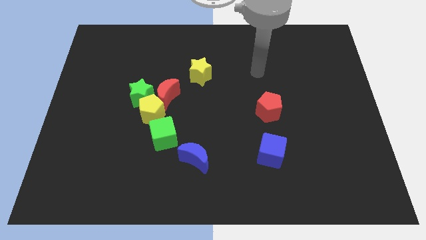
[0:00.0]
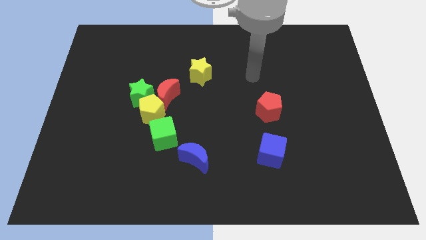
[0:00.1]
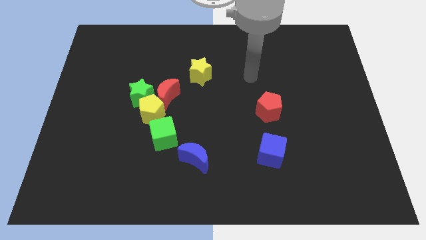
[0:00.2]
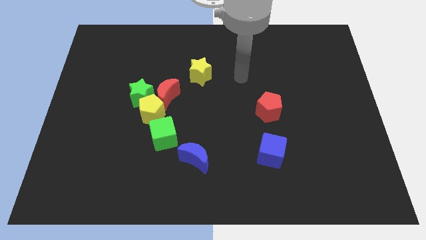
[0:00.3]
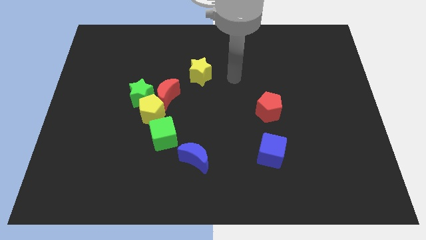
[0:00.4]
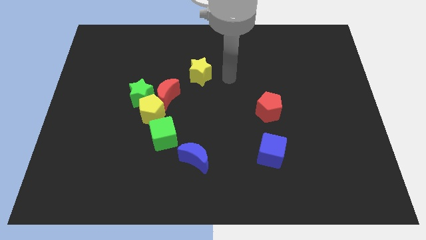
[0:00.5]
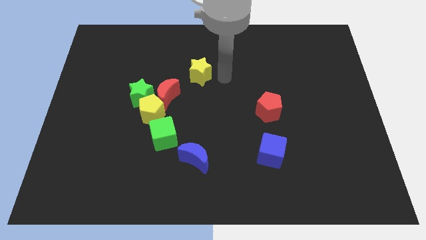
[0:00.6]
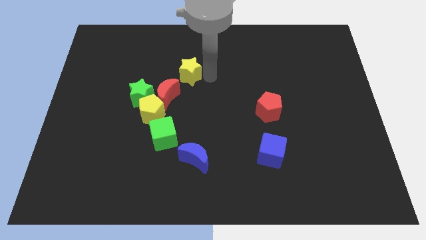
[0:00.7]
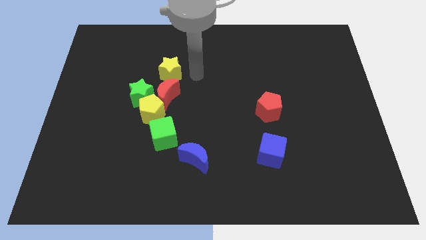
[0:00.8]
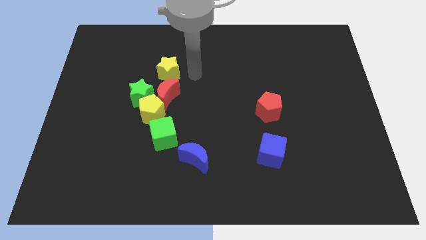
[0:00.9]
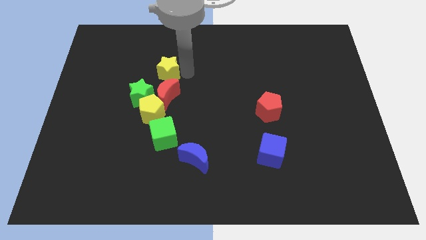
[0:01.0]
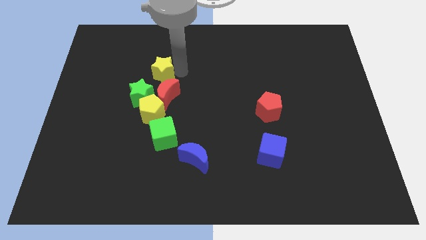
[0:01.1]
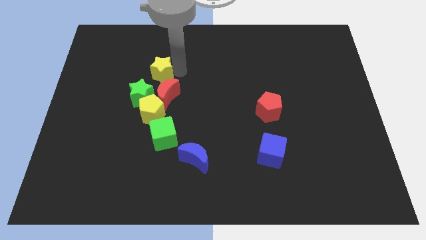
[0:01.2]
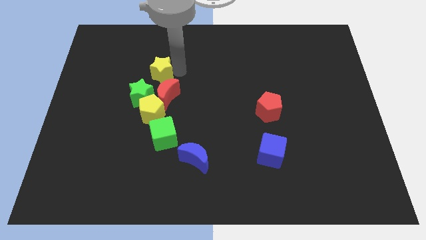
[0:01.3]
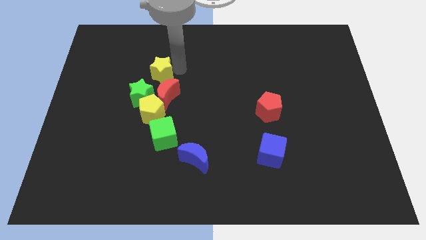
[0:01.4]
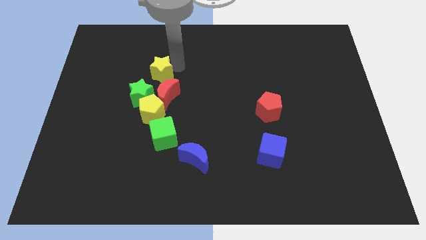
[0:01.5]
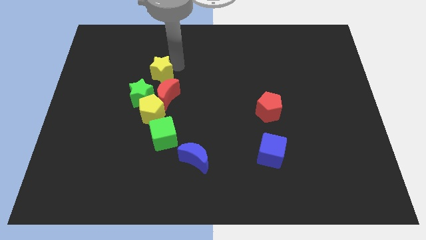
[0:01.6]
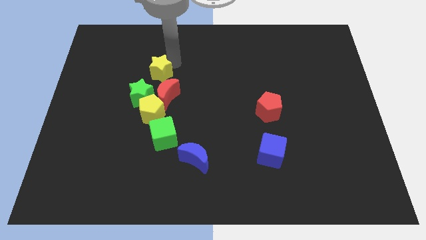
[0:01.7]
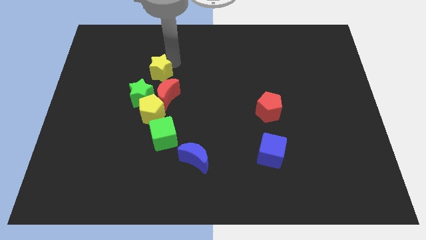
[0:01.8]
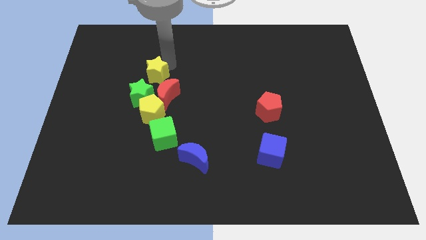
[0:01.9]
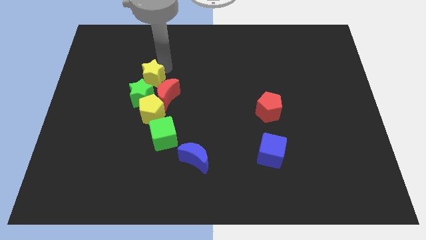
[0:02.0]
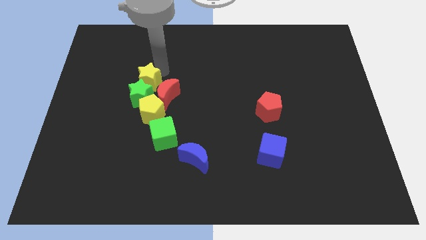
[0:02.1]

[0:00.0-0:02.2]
move the yellow star above the green star

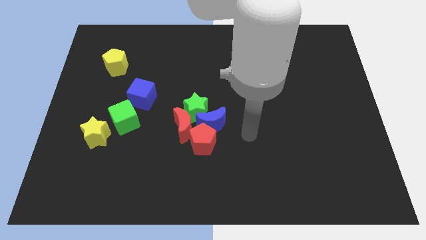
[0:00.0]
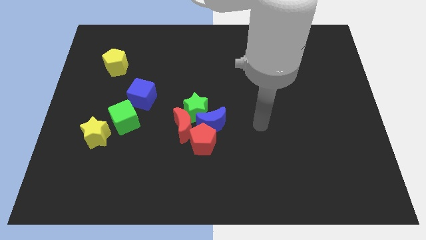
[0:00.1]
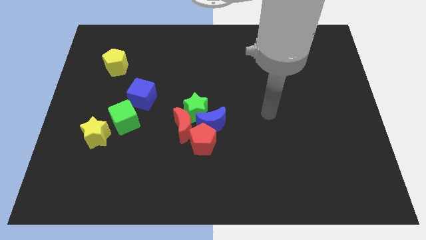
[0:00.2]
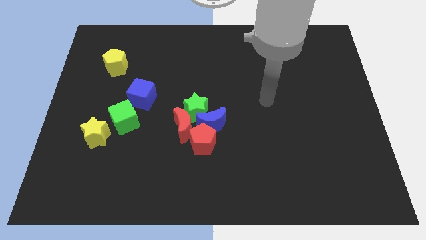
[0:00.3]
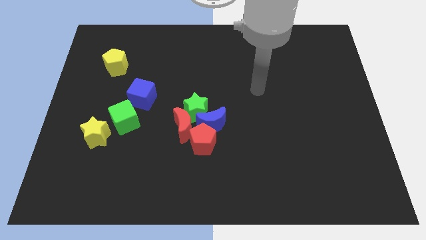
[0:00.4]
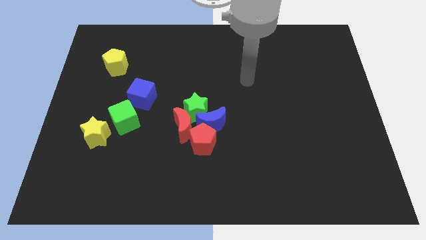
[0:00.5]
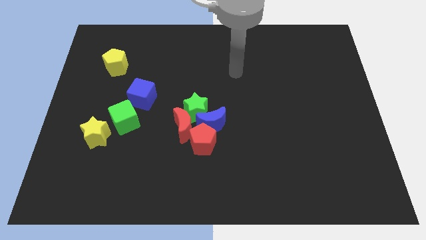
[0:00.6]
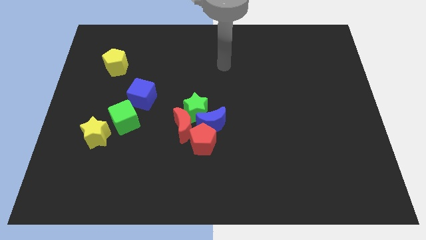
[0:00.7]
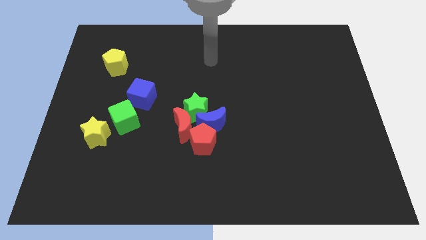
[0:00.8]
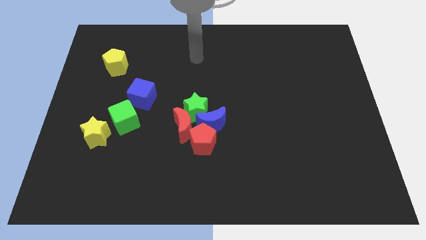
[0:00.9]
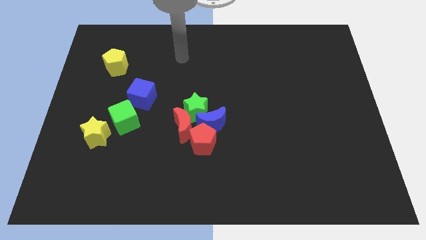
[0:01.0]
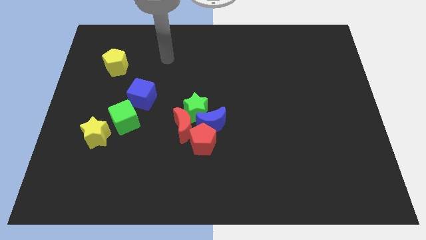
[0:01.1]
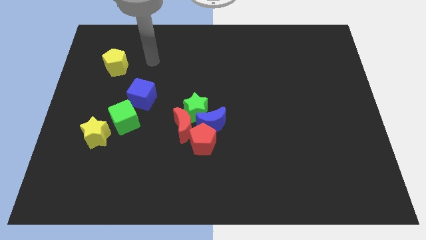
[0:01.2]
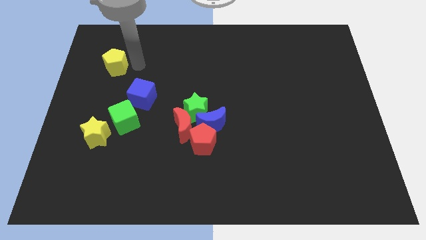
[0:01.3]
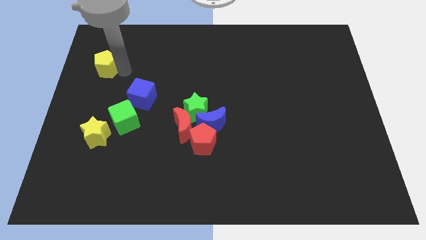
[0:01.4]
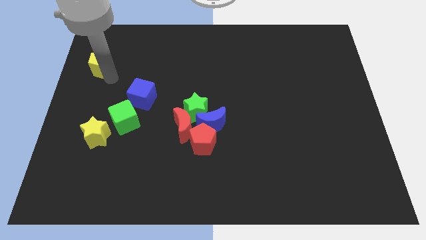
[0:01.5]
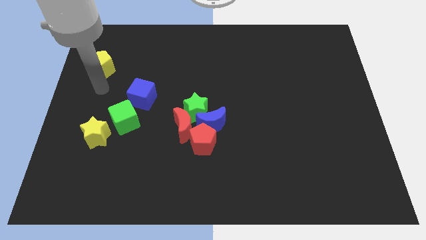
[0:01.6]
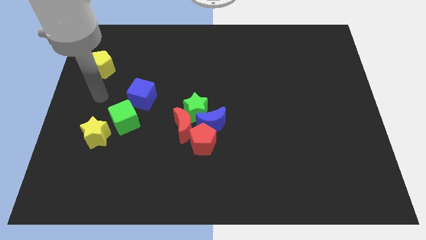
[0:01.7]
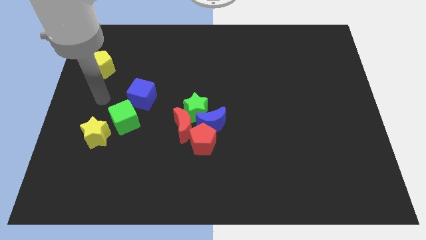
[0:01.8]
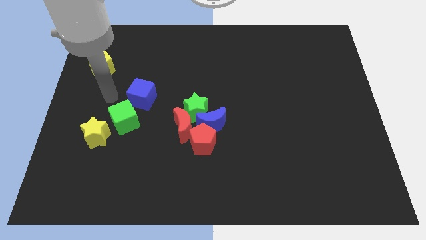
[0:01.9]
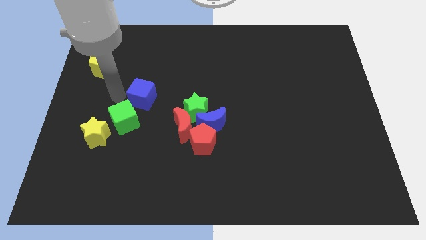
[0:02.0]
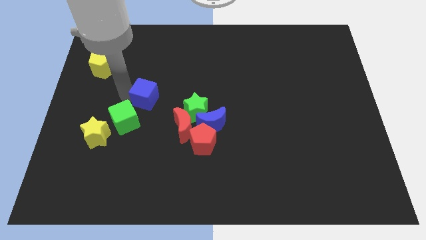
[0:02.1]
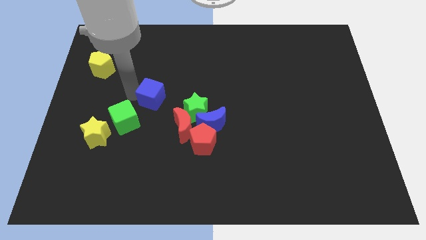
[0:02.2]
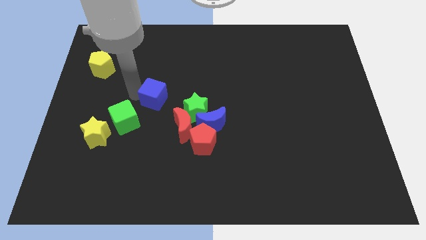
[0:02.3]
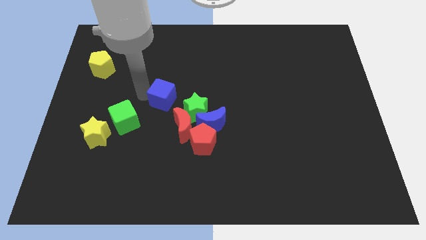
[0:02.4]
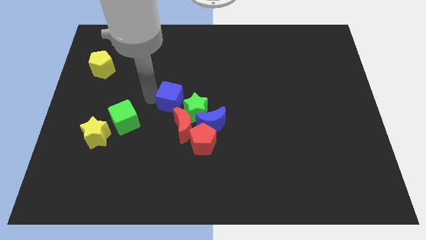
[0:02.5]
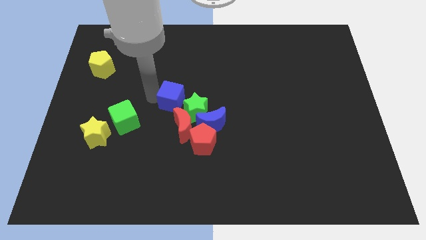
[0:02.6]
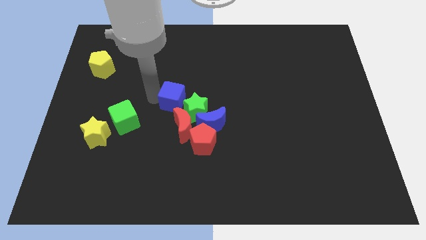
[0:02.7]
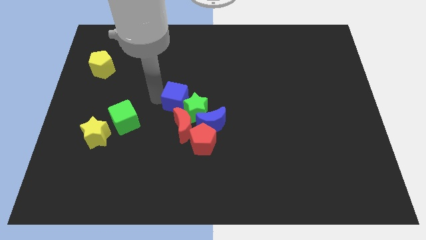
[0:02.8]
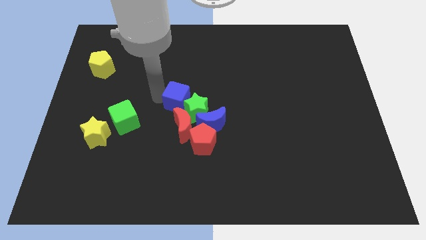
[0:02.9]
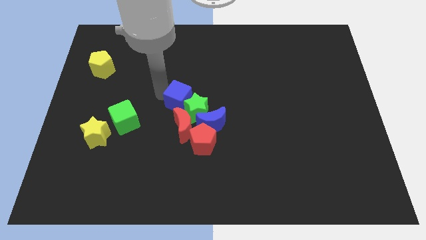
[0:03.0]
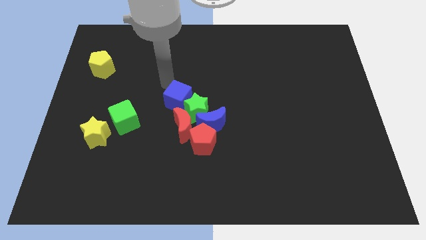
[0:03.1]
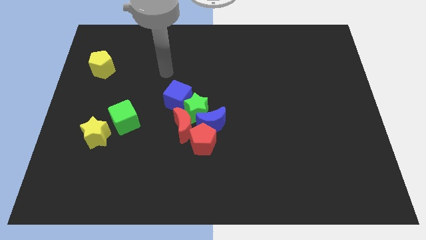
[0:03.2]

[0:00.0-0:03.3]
move the blue cube to the top left side of the green star

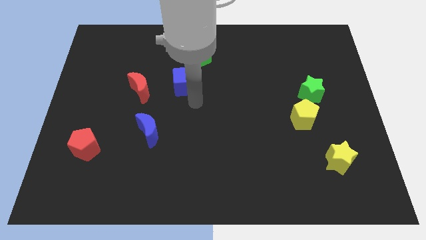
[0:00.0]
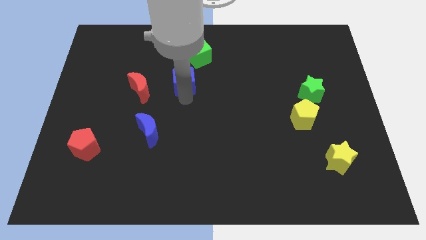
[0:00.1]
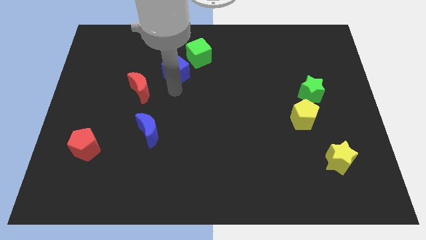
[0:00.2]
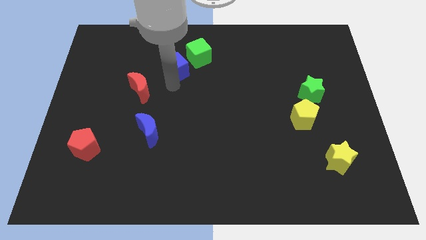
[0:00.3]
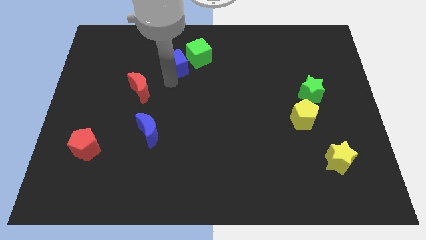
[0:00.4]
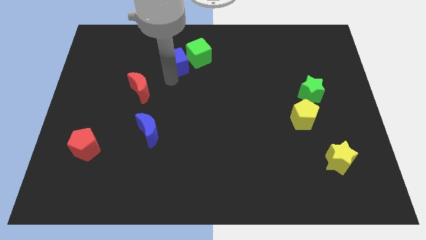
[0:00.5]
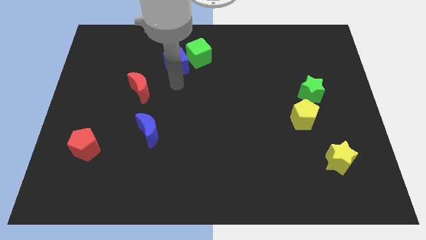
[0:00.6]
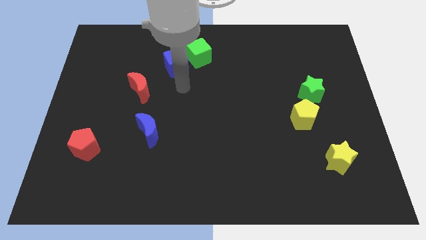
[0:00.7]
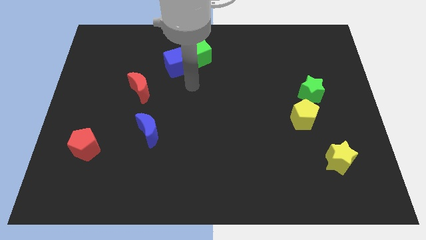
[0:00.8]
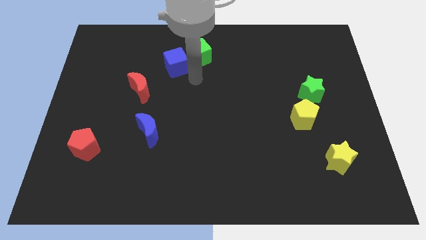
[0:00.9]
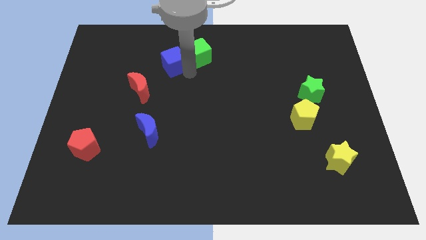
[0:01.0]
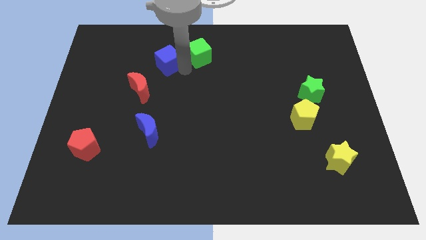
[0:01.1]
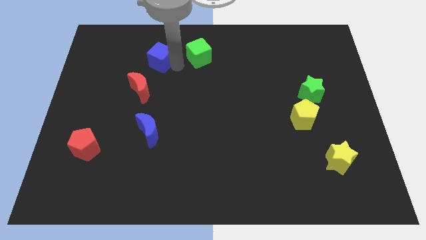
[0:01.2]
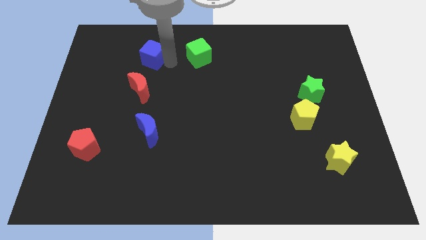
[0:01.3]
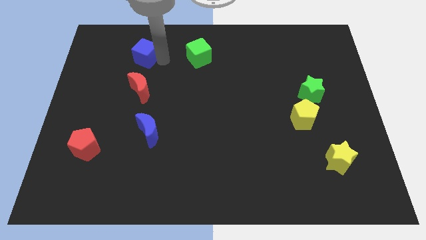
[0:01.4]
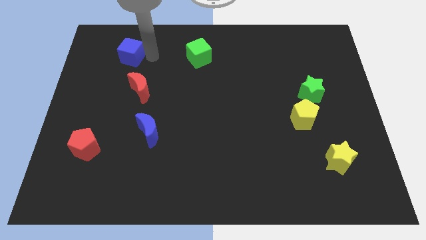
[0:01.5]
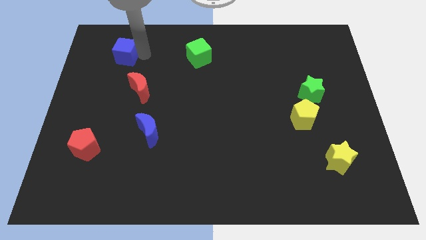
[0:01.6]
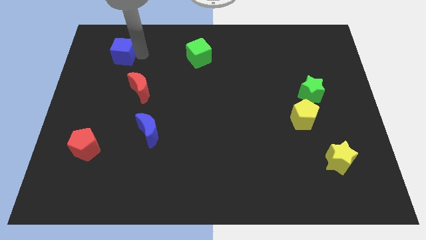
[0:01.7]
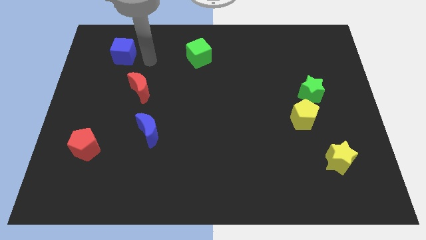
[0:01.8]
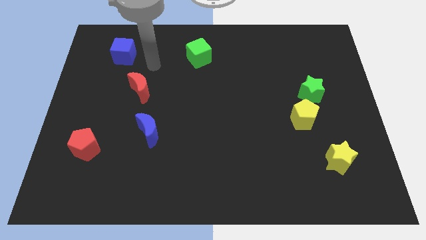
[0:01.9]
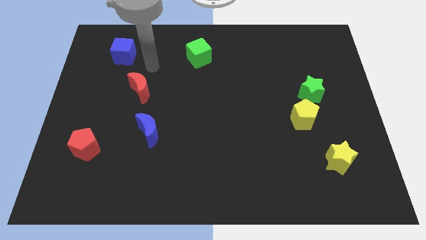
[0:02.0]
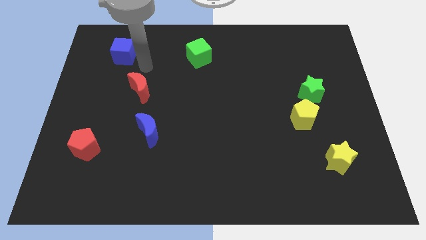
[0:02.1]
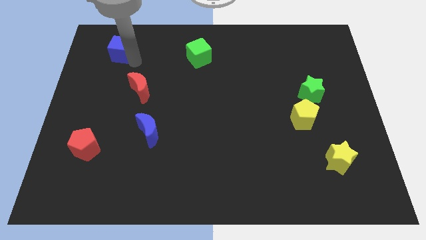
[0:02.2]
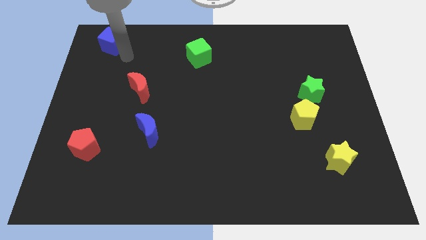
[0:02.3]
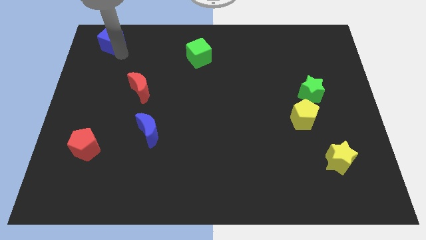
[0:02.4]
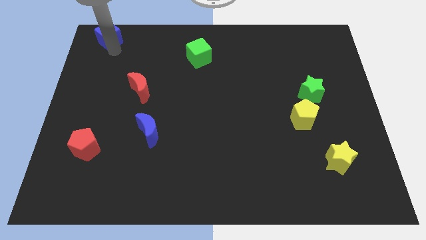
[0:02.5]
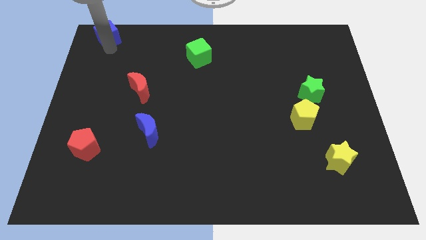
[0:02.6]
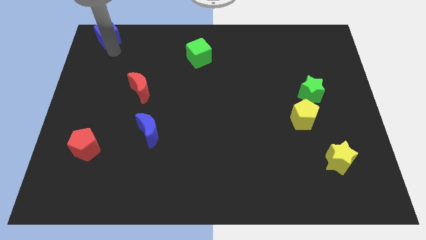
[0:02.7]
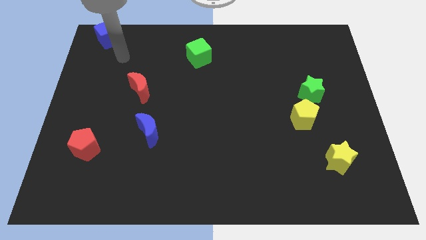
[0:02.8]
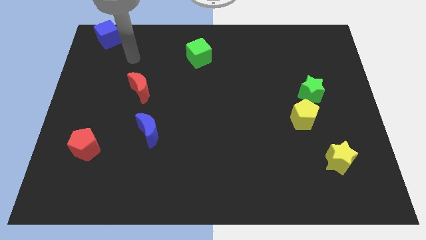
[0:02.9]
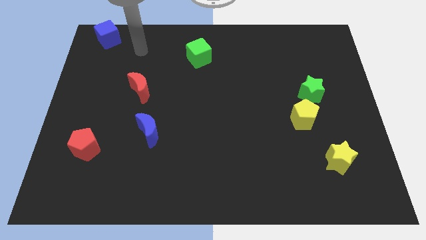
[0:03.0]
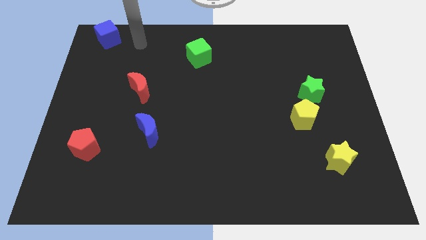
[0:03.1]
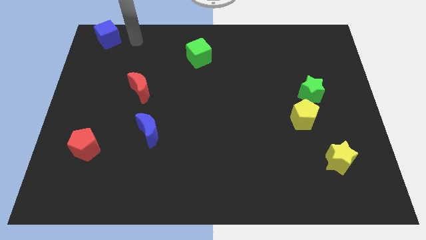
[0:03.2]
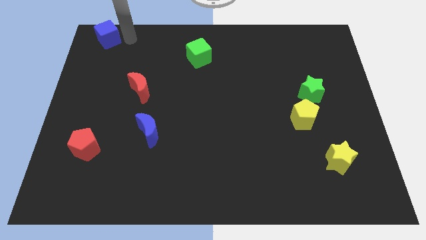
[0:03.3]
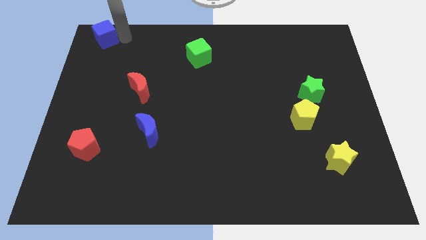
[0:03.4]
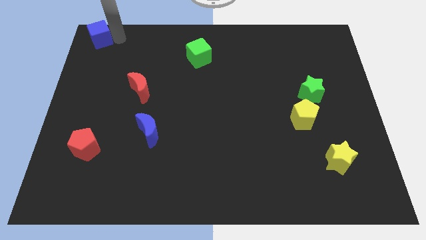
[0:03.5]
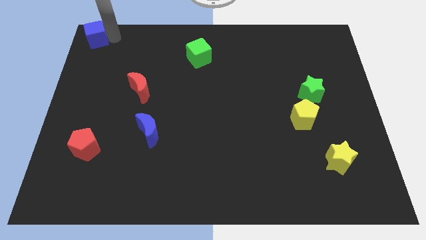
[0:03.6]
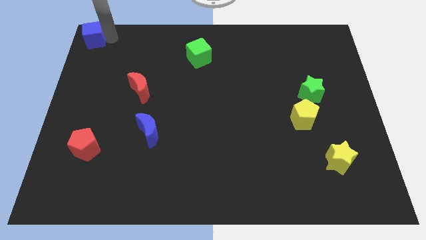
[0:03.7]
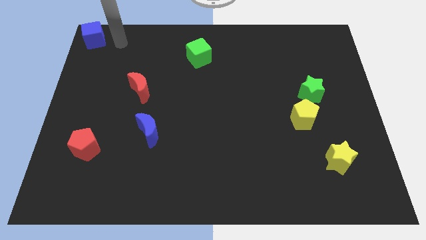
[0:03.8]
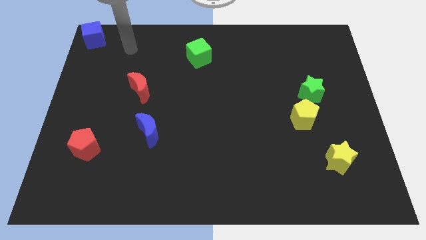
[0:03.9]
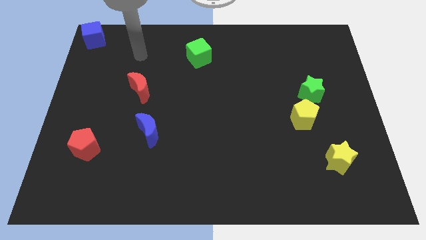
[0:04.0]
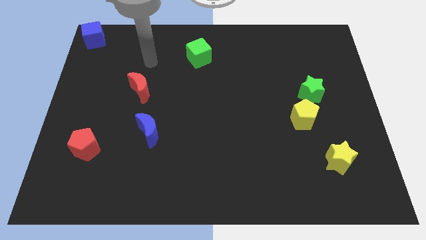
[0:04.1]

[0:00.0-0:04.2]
move the blue cube to the top left of the board
